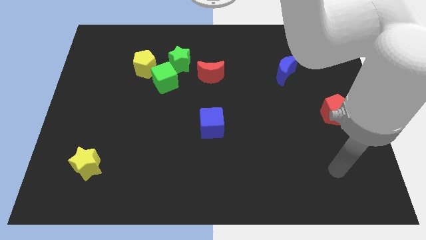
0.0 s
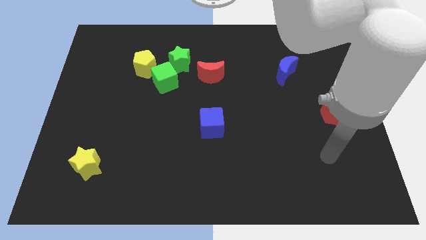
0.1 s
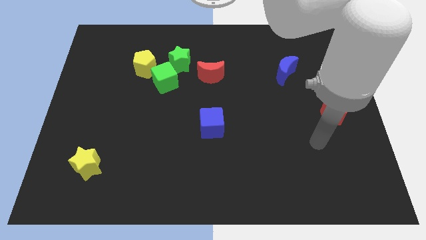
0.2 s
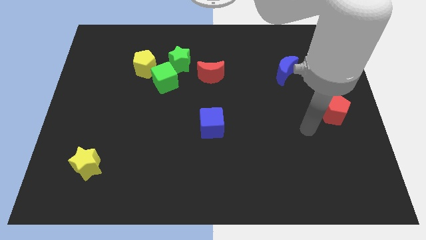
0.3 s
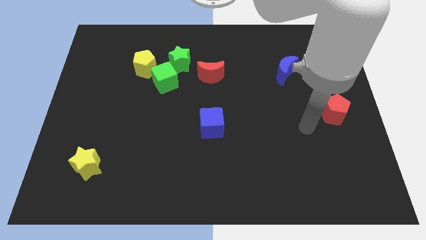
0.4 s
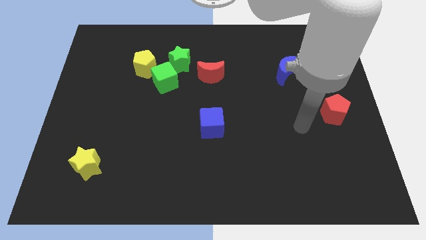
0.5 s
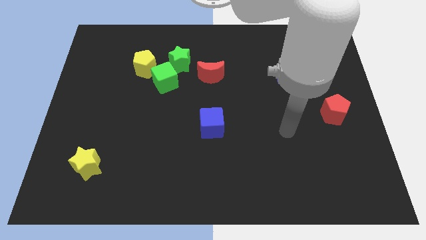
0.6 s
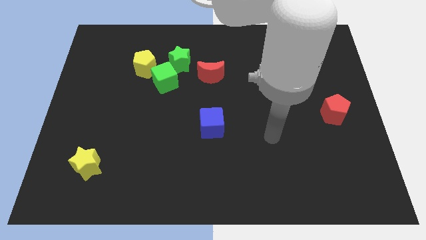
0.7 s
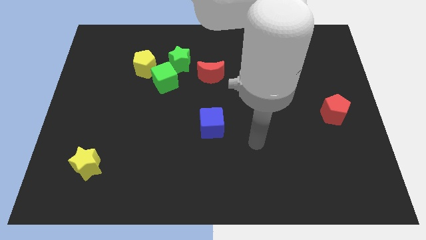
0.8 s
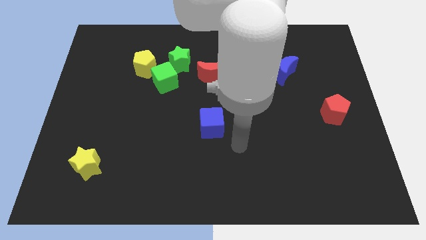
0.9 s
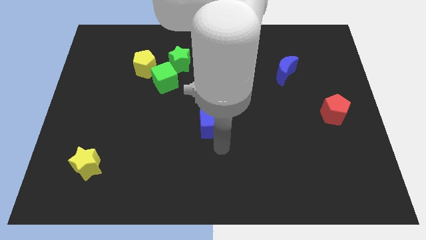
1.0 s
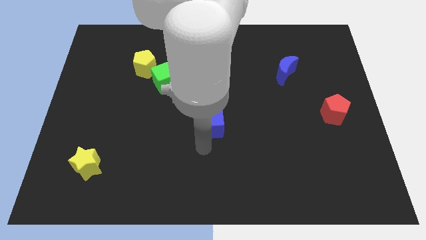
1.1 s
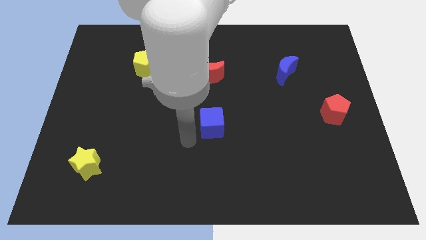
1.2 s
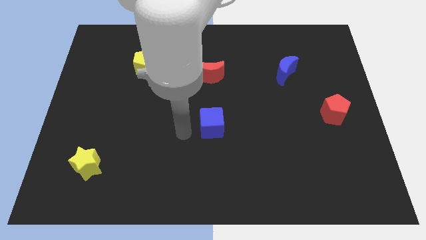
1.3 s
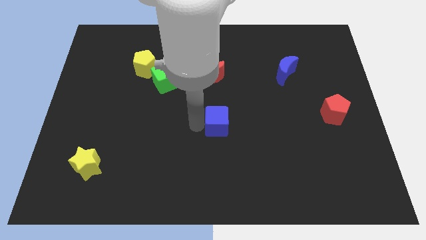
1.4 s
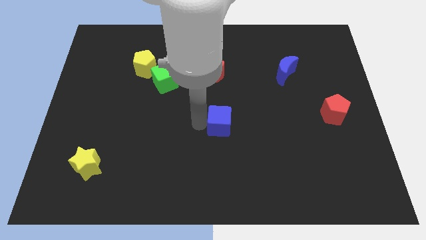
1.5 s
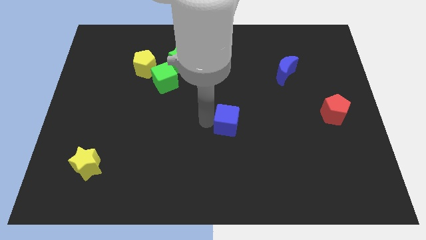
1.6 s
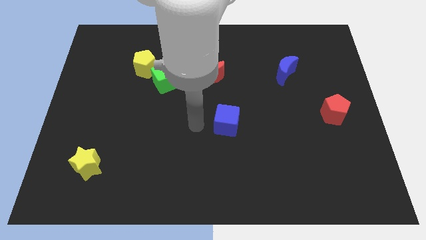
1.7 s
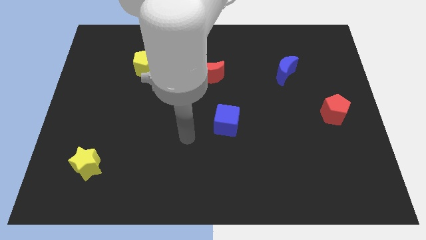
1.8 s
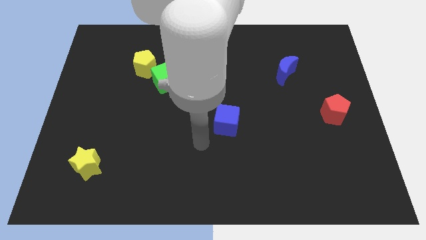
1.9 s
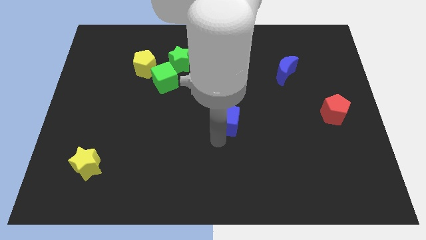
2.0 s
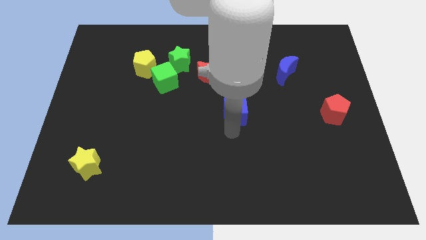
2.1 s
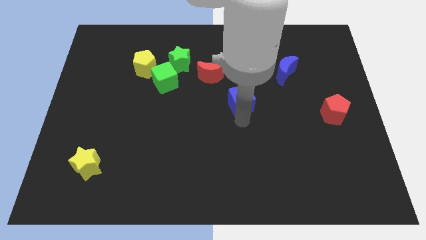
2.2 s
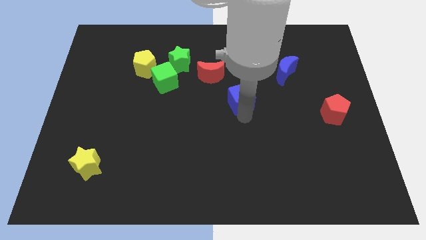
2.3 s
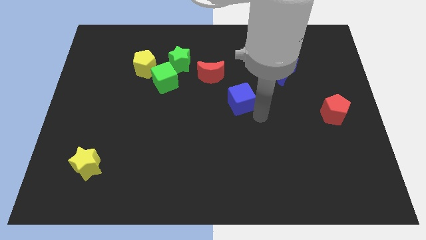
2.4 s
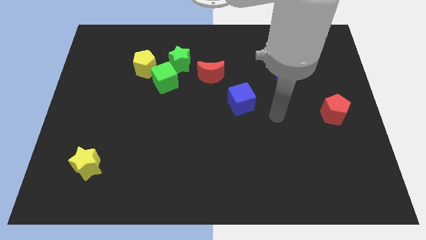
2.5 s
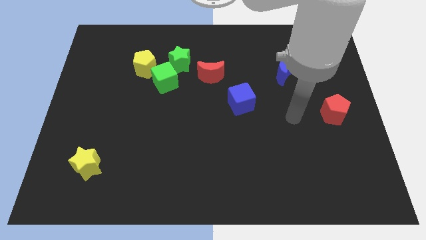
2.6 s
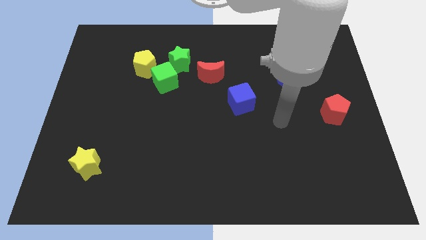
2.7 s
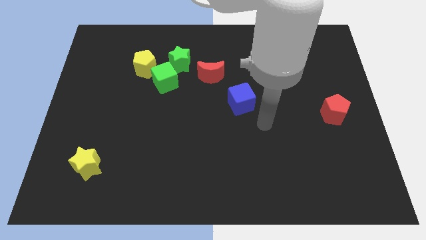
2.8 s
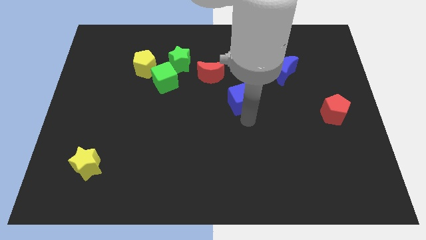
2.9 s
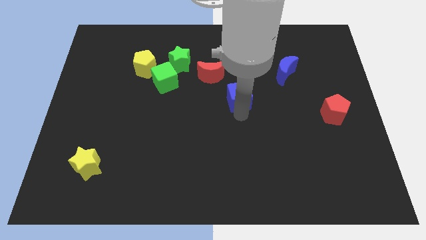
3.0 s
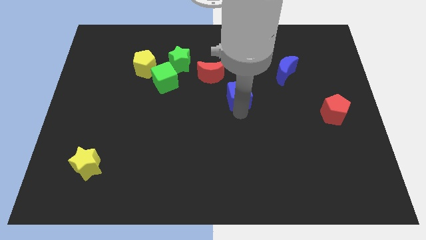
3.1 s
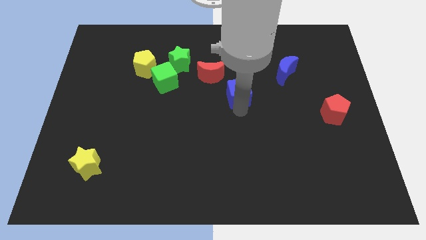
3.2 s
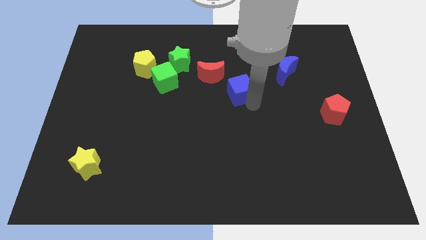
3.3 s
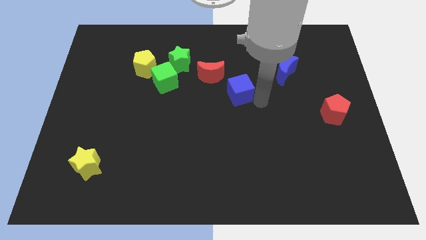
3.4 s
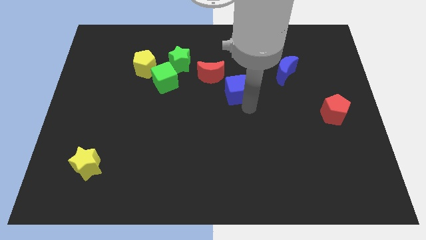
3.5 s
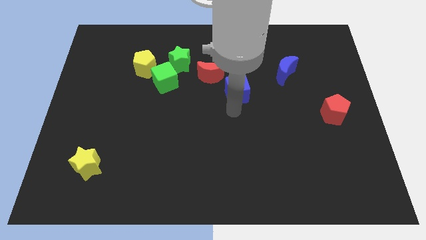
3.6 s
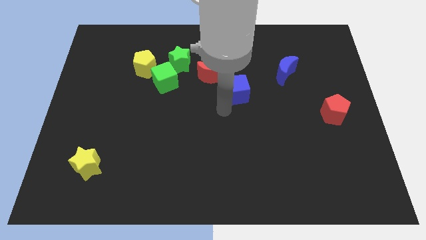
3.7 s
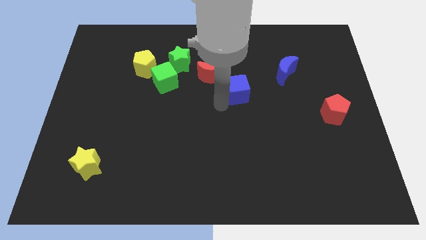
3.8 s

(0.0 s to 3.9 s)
place the blue cube at the bottom right side of red moon

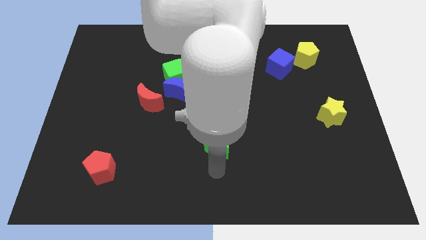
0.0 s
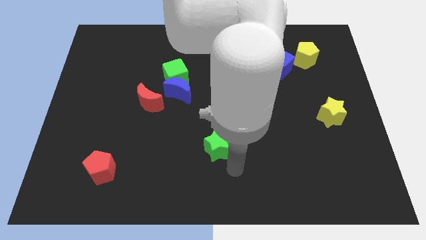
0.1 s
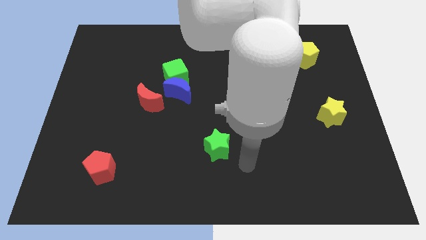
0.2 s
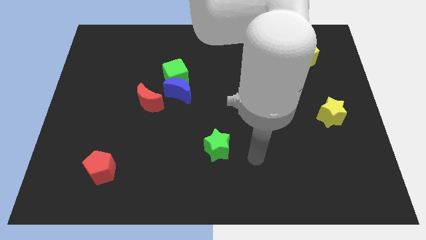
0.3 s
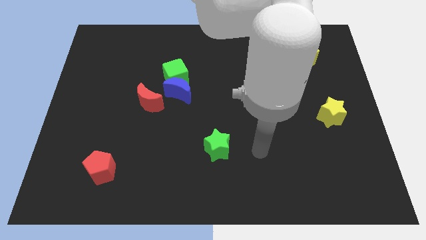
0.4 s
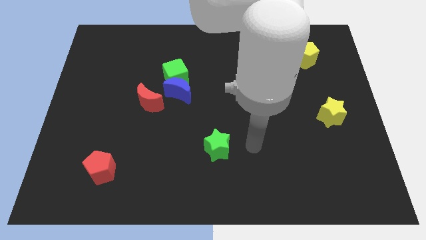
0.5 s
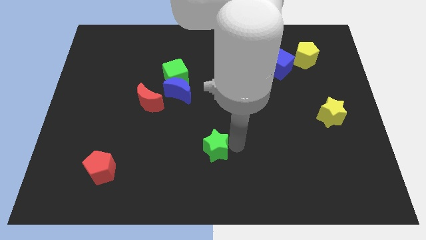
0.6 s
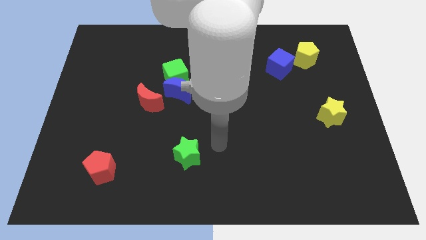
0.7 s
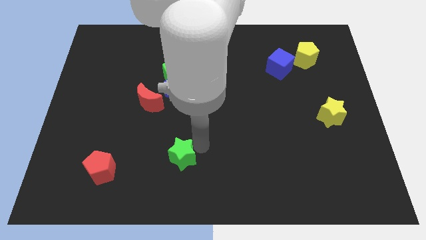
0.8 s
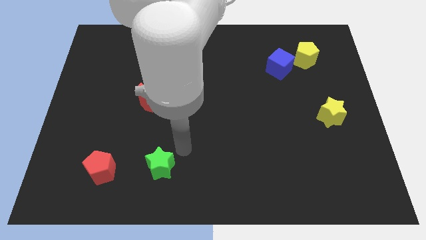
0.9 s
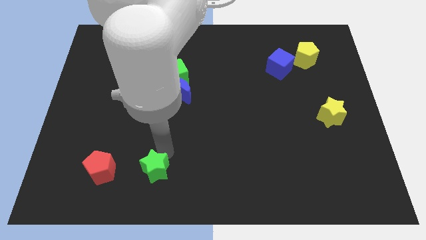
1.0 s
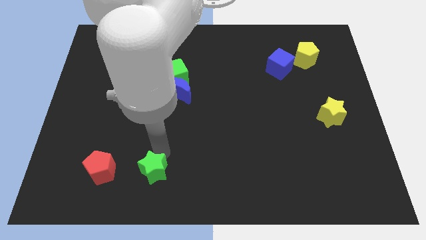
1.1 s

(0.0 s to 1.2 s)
push the green star towards red pentagon

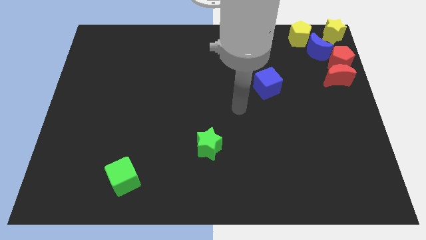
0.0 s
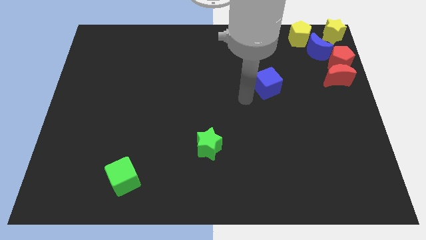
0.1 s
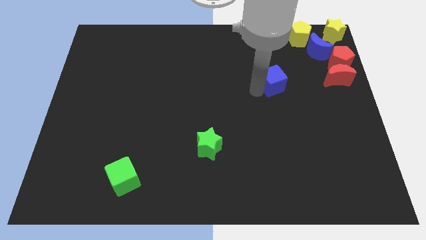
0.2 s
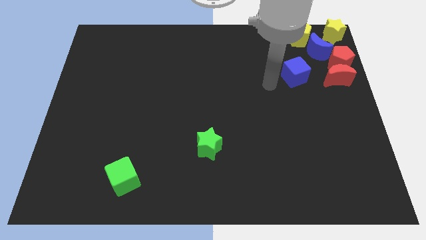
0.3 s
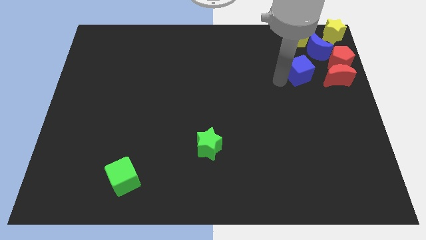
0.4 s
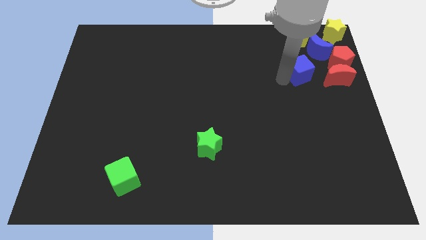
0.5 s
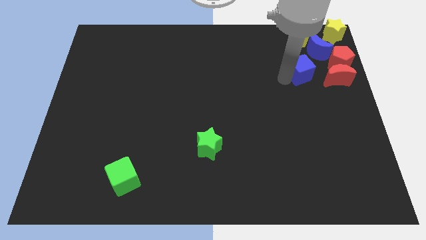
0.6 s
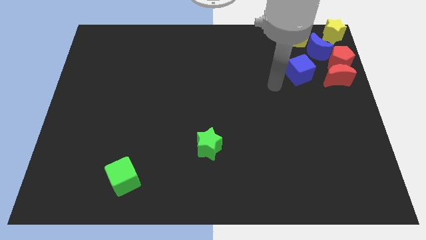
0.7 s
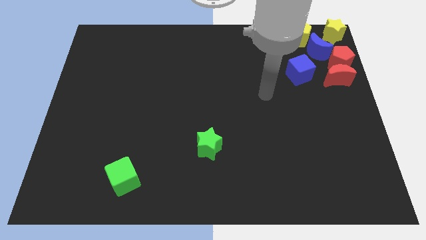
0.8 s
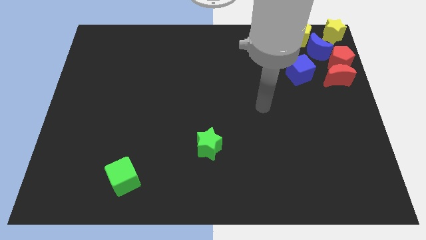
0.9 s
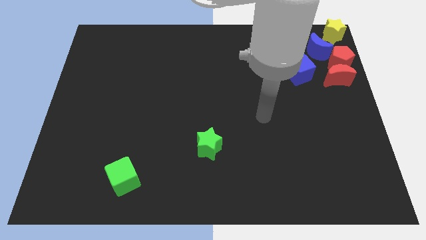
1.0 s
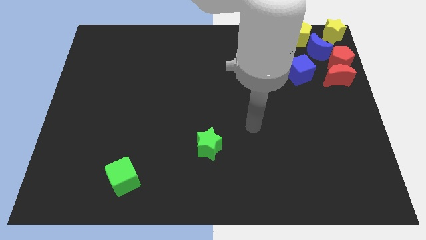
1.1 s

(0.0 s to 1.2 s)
put the blue cube underneath the yellow pentagon

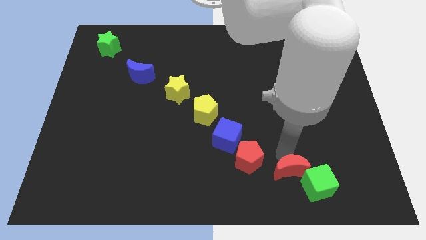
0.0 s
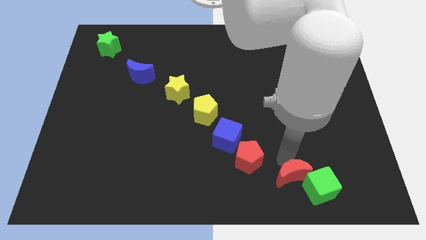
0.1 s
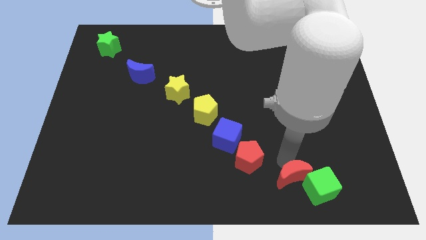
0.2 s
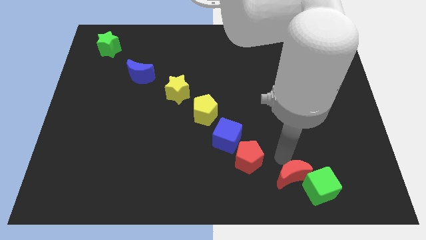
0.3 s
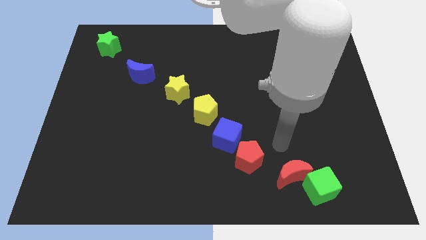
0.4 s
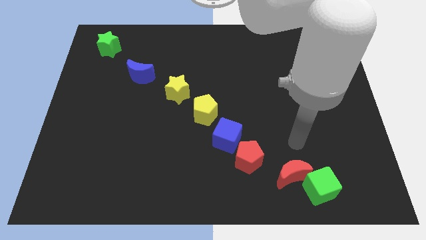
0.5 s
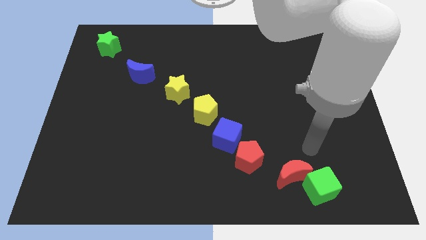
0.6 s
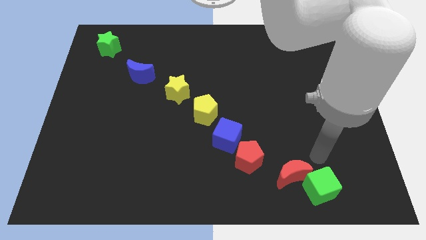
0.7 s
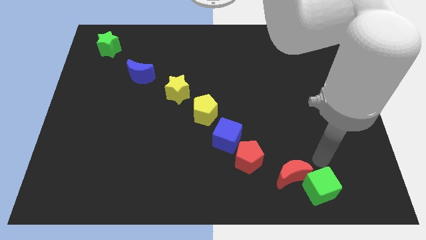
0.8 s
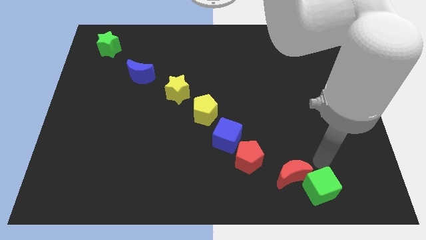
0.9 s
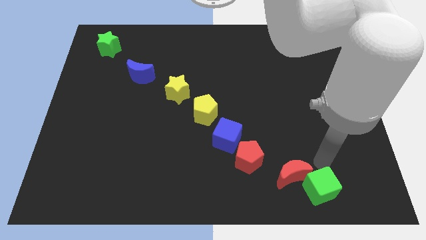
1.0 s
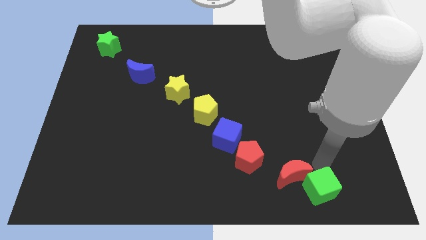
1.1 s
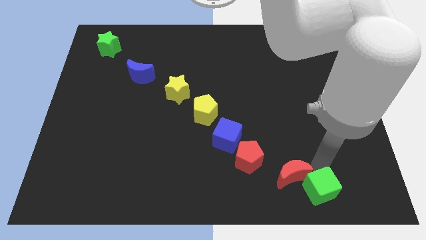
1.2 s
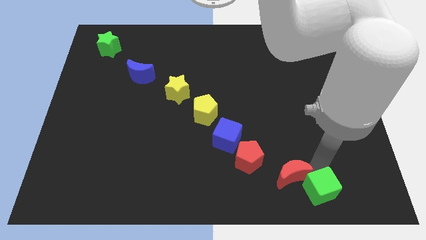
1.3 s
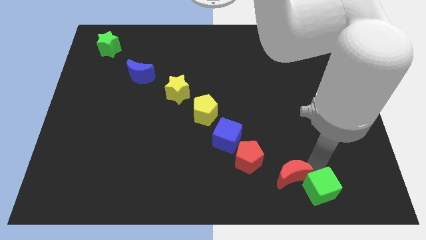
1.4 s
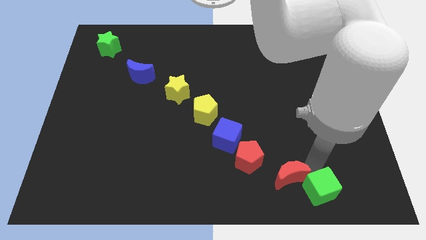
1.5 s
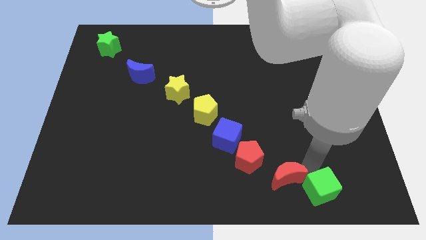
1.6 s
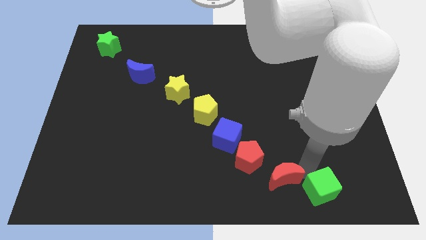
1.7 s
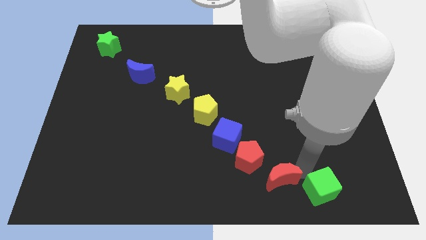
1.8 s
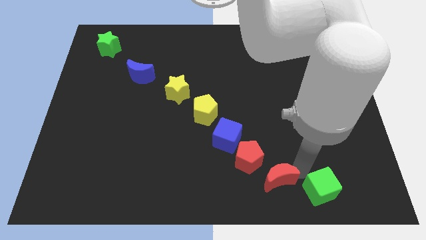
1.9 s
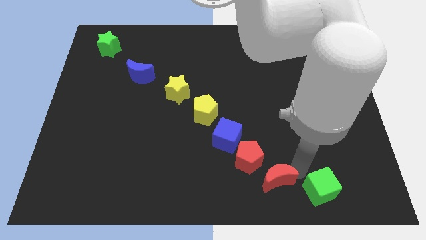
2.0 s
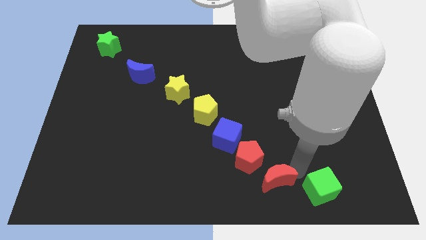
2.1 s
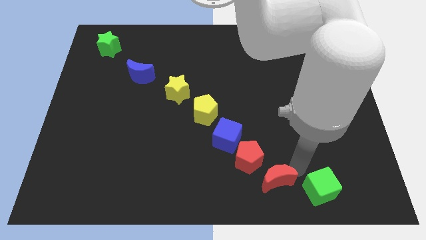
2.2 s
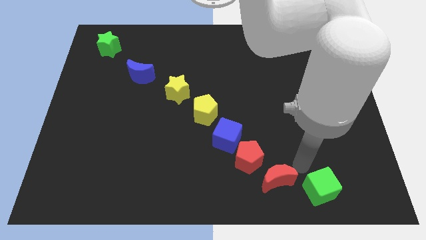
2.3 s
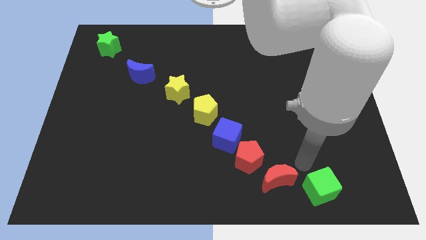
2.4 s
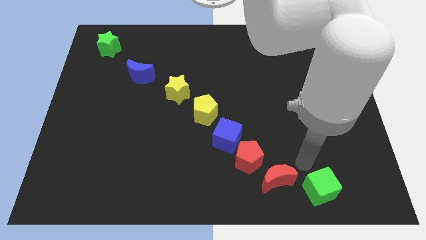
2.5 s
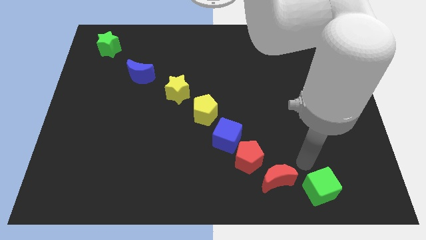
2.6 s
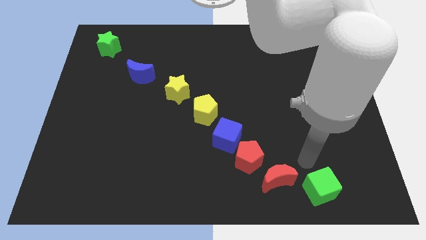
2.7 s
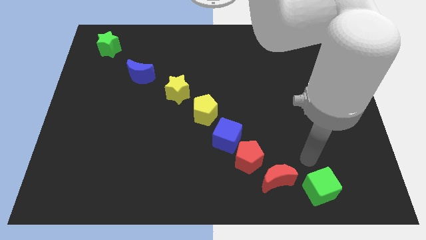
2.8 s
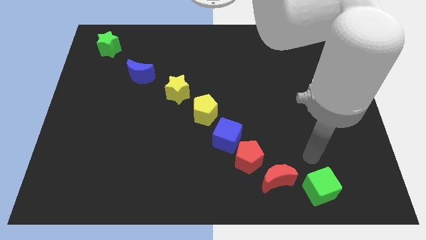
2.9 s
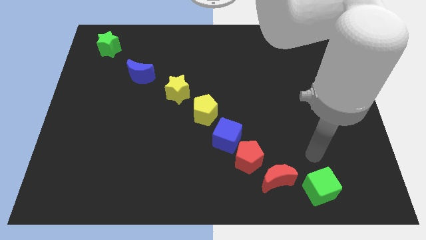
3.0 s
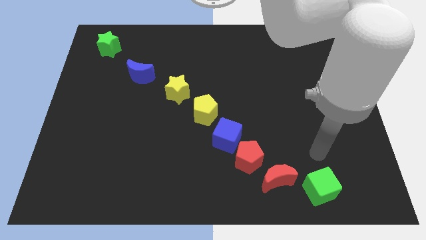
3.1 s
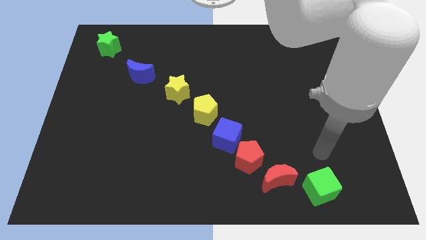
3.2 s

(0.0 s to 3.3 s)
place the red moon between the red pentagon and green cube
